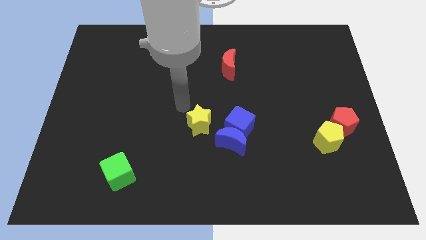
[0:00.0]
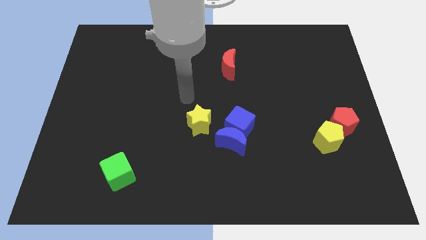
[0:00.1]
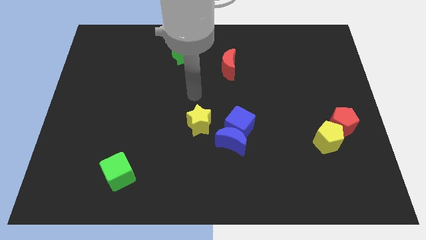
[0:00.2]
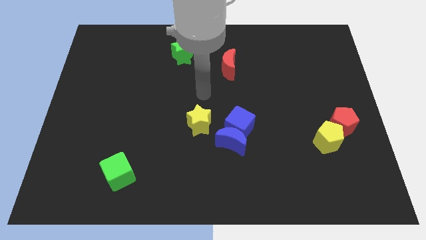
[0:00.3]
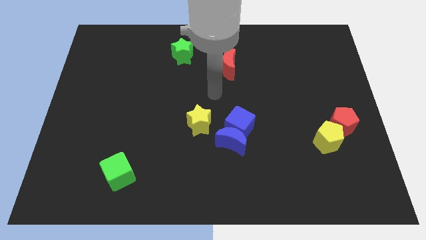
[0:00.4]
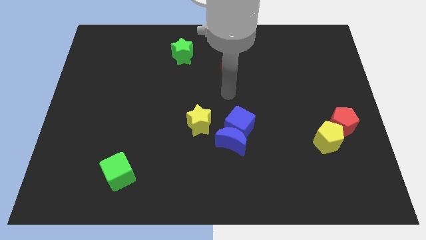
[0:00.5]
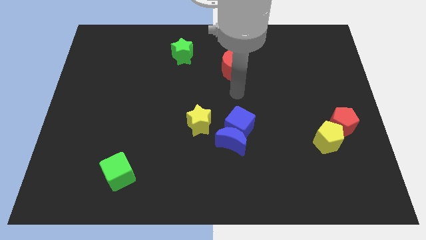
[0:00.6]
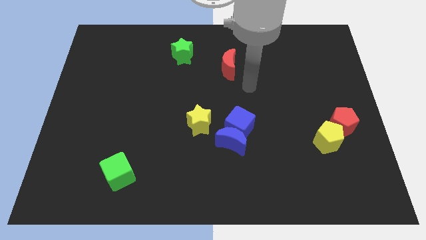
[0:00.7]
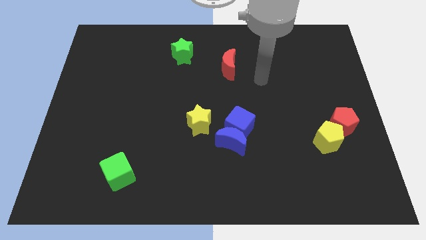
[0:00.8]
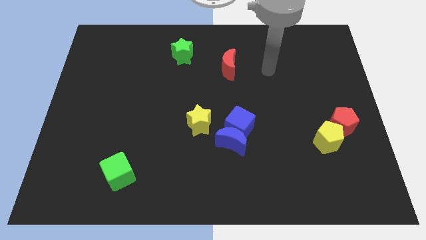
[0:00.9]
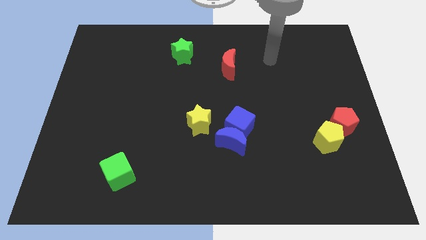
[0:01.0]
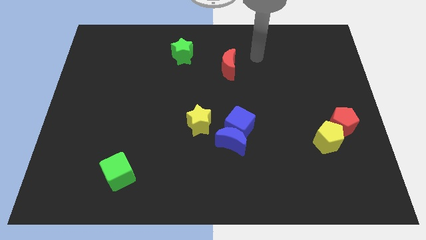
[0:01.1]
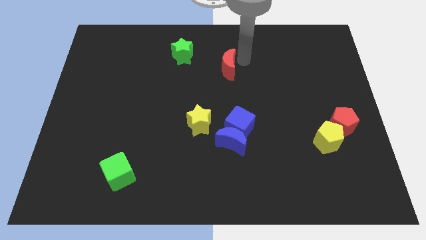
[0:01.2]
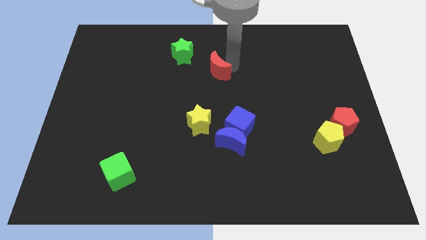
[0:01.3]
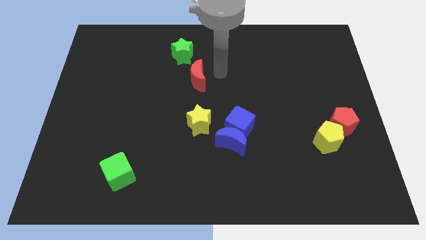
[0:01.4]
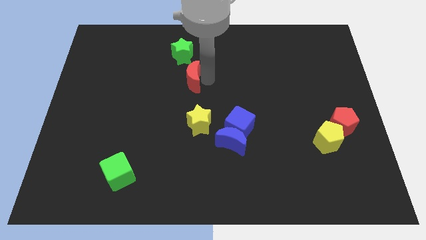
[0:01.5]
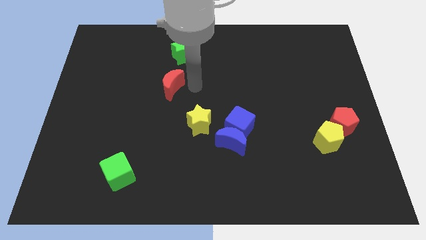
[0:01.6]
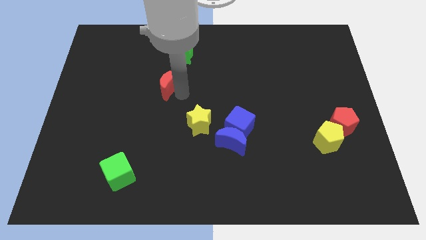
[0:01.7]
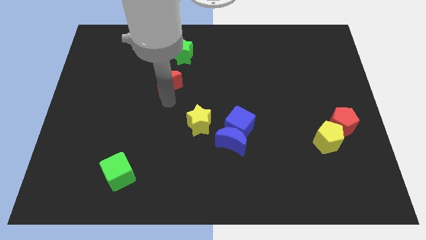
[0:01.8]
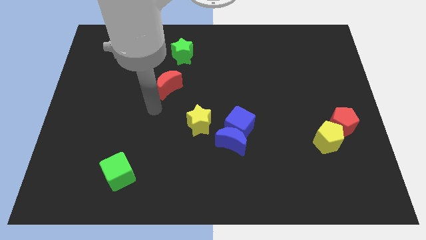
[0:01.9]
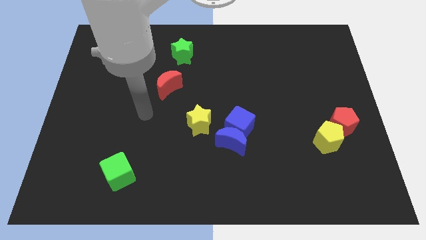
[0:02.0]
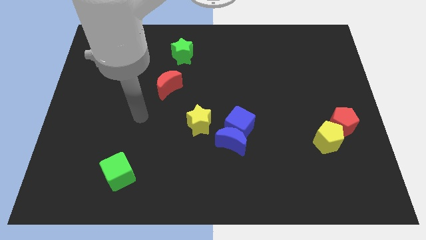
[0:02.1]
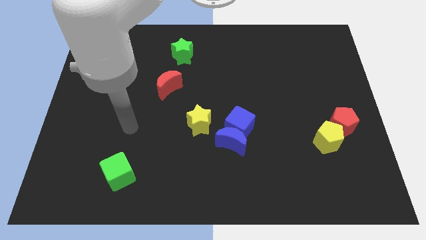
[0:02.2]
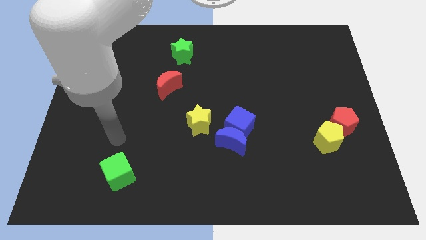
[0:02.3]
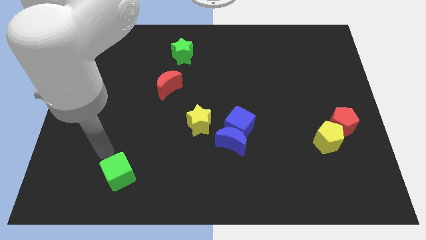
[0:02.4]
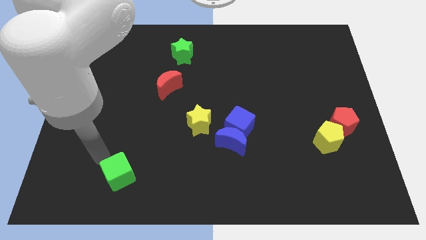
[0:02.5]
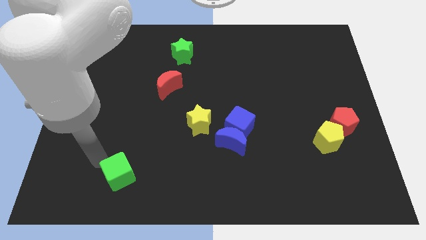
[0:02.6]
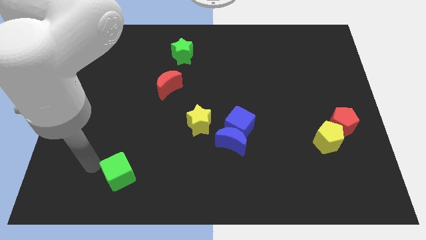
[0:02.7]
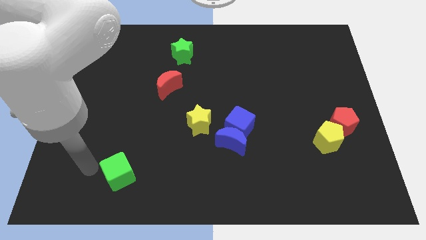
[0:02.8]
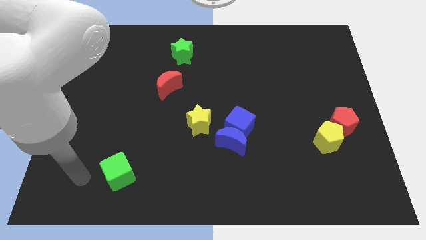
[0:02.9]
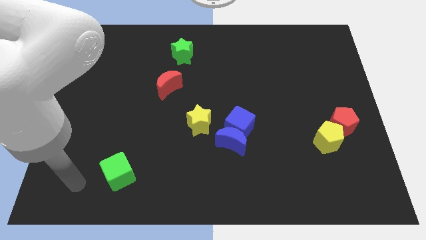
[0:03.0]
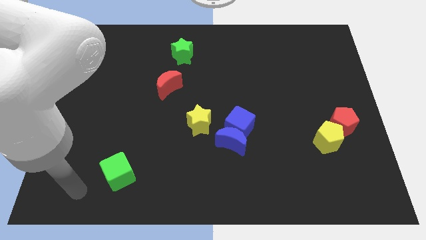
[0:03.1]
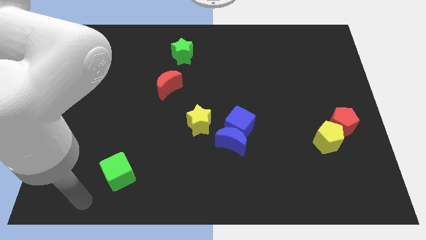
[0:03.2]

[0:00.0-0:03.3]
push the red crescent to the bottom left side of the green star

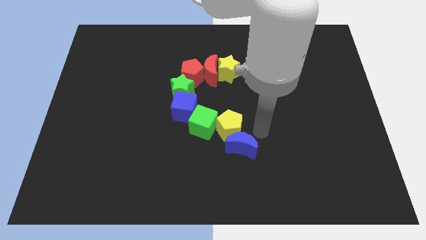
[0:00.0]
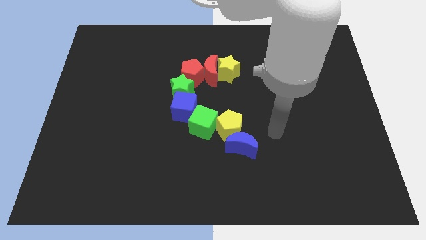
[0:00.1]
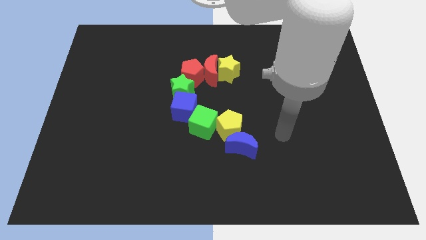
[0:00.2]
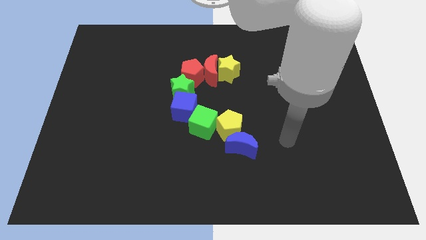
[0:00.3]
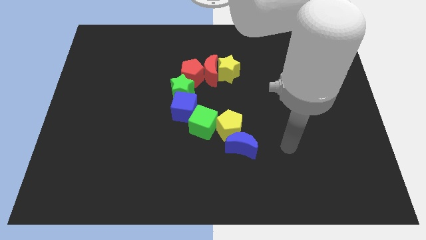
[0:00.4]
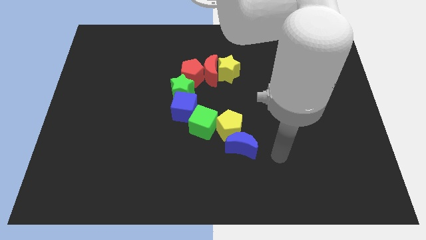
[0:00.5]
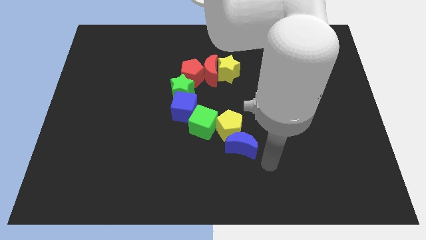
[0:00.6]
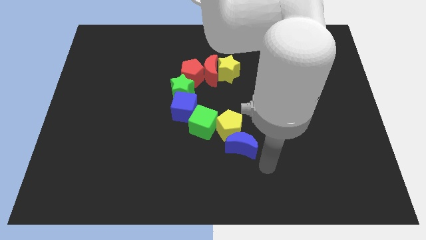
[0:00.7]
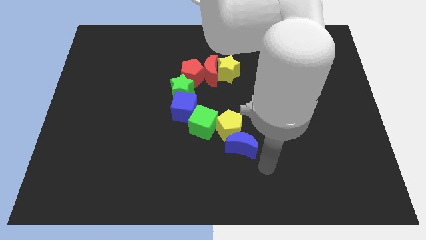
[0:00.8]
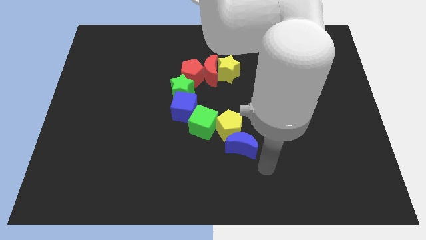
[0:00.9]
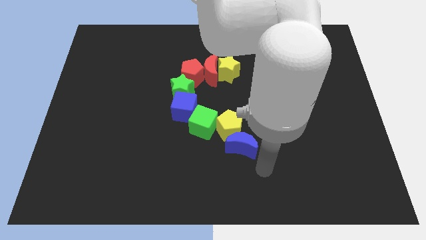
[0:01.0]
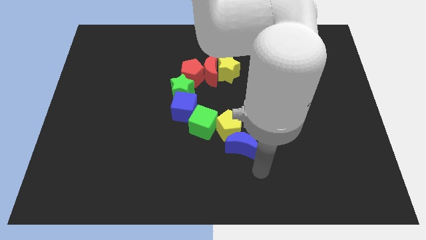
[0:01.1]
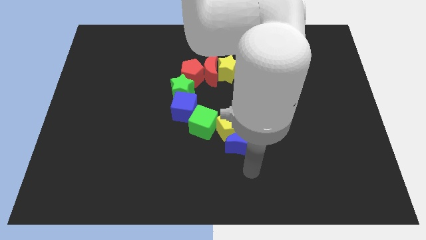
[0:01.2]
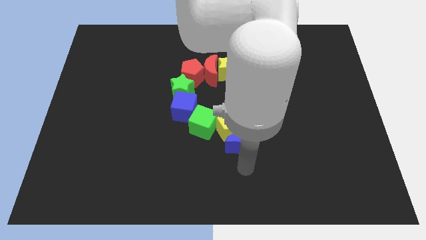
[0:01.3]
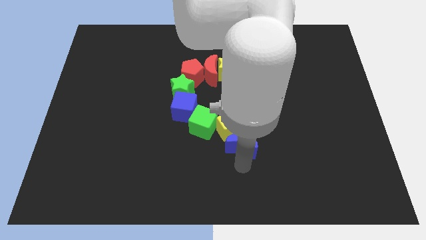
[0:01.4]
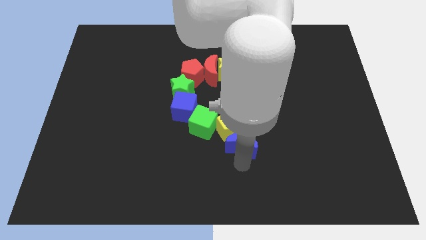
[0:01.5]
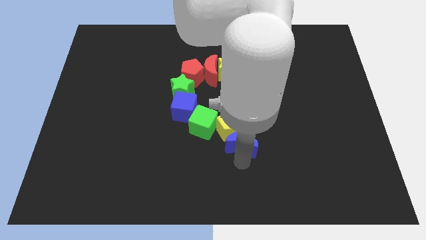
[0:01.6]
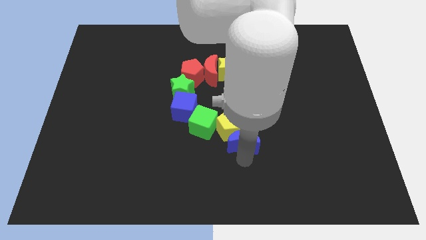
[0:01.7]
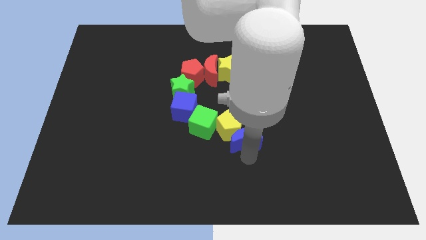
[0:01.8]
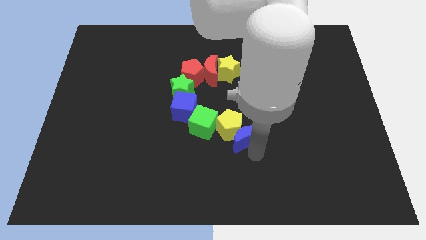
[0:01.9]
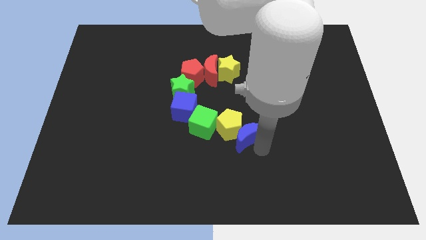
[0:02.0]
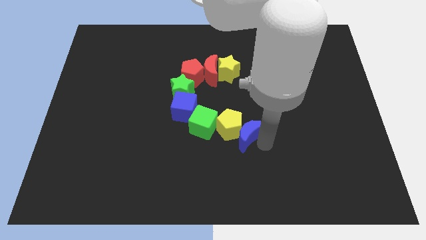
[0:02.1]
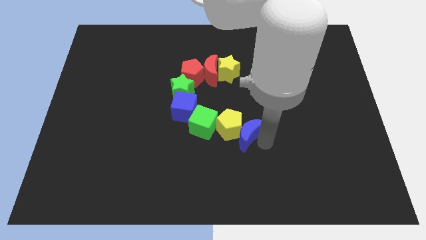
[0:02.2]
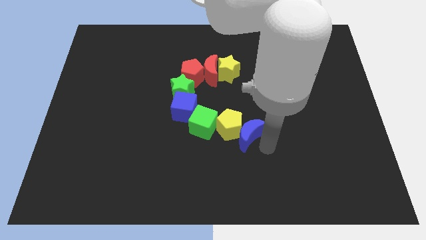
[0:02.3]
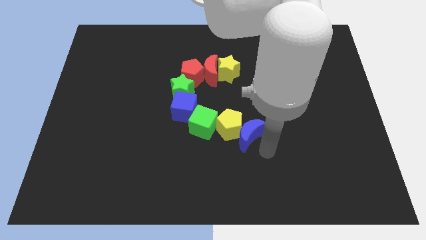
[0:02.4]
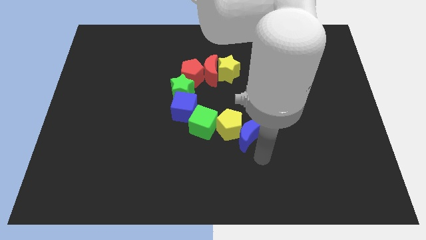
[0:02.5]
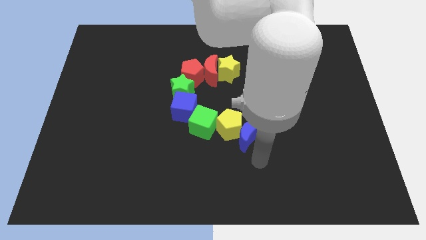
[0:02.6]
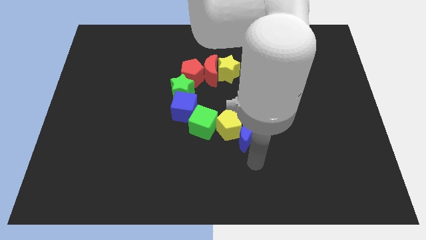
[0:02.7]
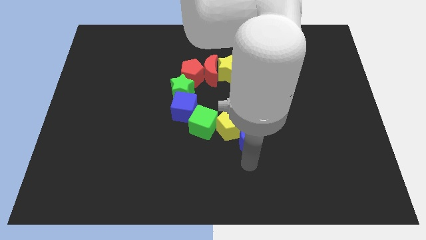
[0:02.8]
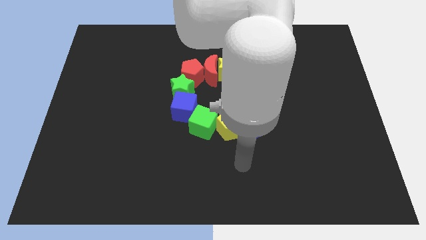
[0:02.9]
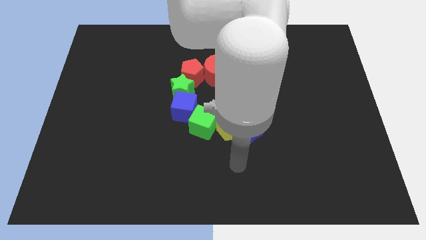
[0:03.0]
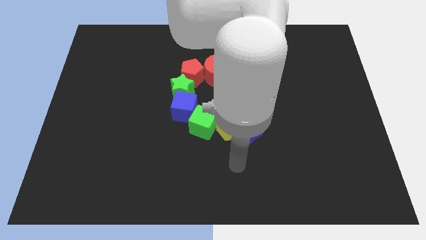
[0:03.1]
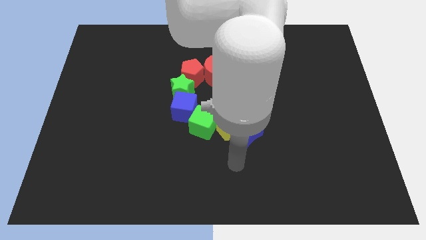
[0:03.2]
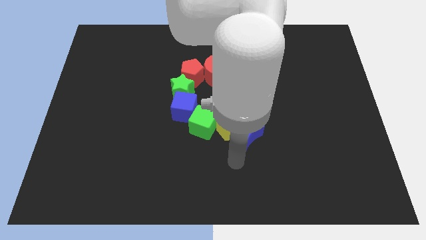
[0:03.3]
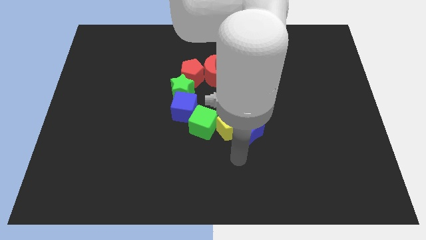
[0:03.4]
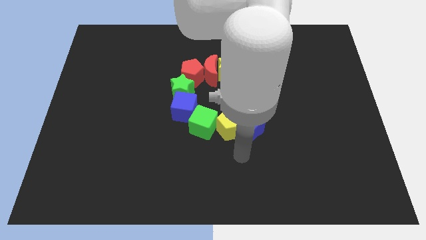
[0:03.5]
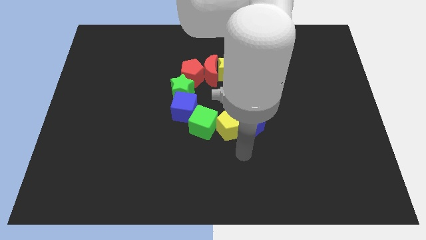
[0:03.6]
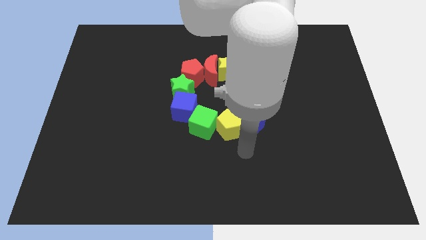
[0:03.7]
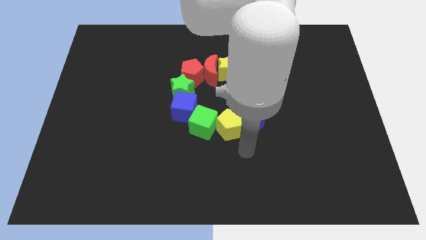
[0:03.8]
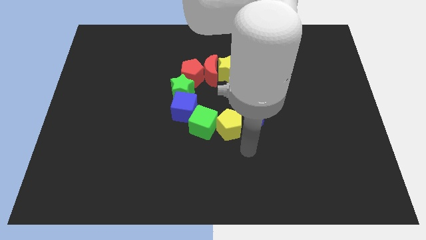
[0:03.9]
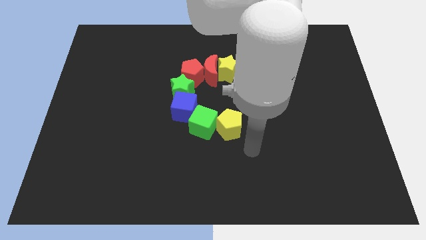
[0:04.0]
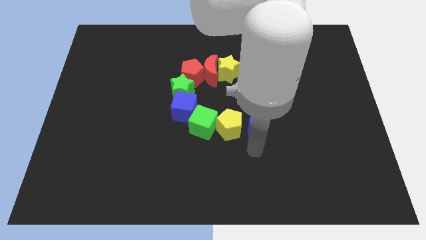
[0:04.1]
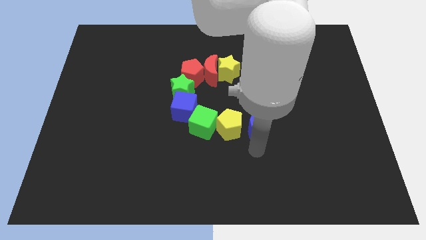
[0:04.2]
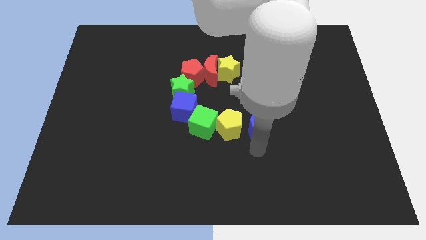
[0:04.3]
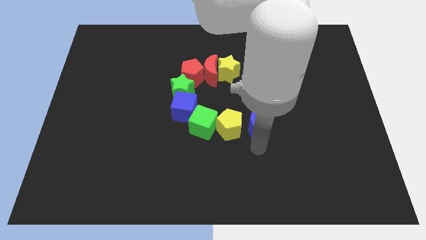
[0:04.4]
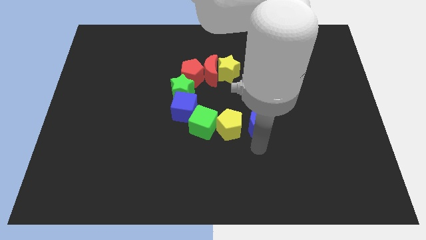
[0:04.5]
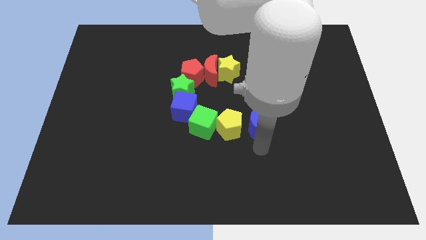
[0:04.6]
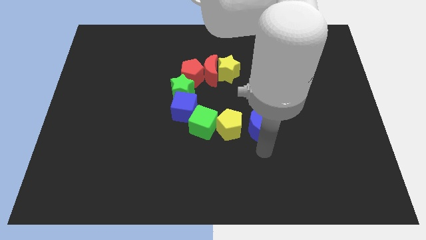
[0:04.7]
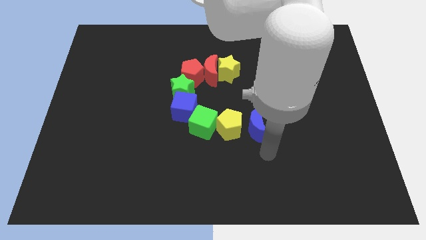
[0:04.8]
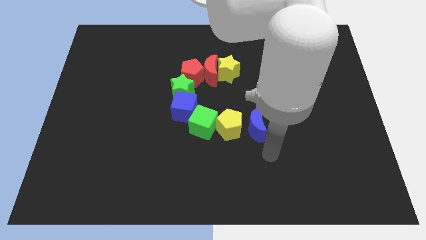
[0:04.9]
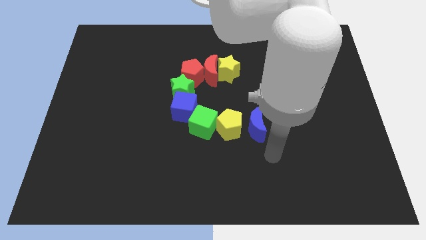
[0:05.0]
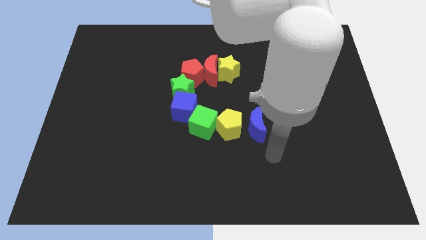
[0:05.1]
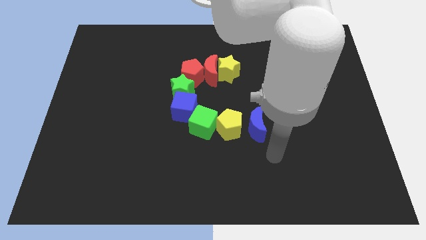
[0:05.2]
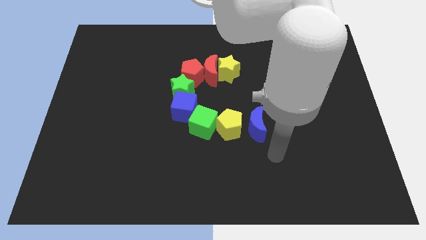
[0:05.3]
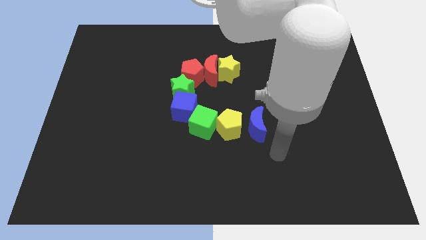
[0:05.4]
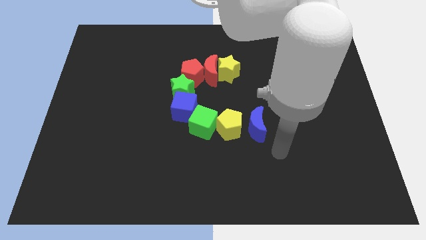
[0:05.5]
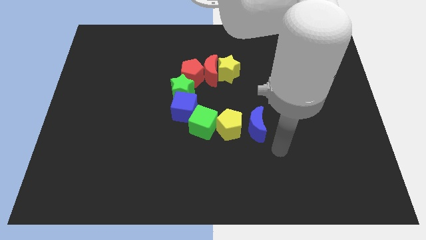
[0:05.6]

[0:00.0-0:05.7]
push the blue crescent to the right of the yellow pentagon
